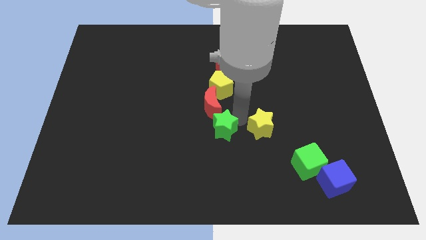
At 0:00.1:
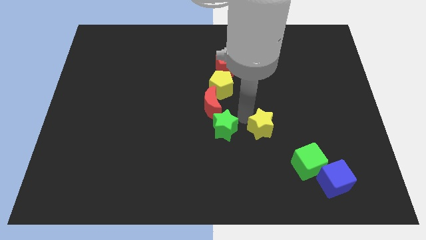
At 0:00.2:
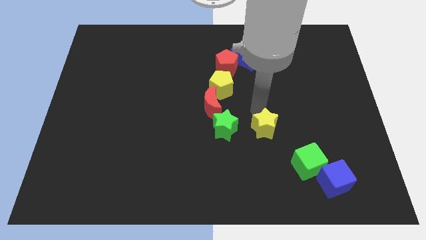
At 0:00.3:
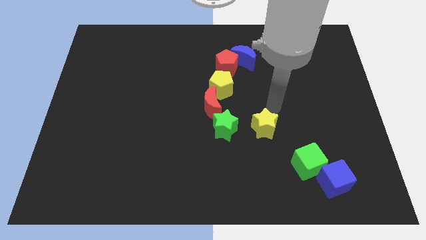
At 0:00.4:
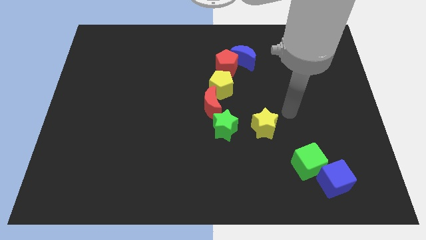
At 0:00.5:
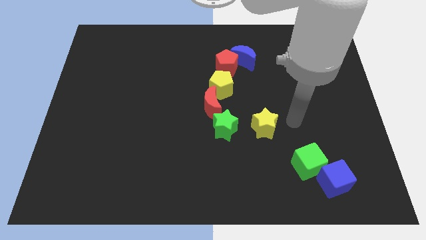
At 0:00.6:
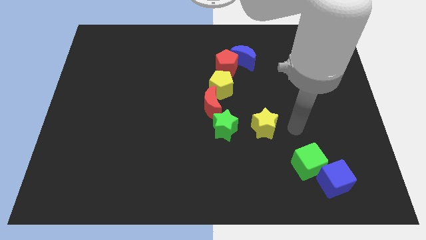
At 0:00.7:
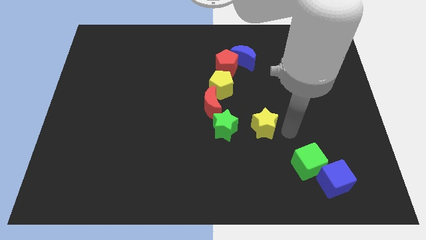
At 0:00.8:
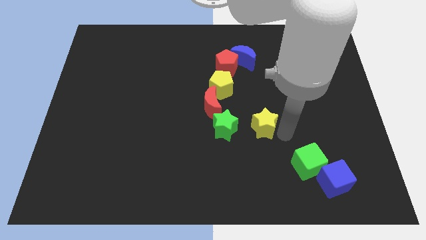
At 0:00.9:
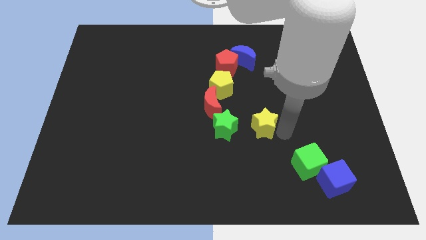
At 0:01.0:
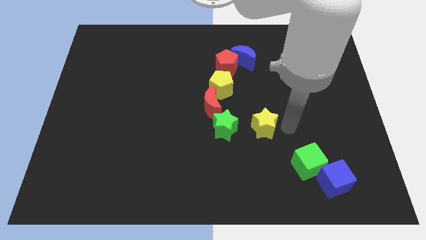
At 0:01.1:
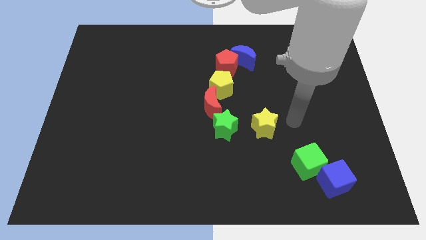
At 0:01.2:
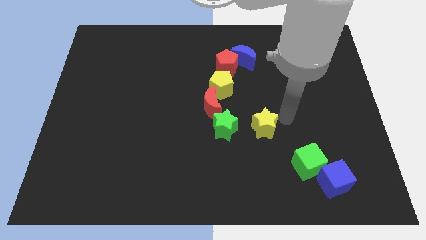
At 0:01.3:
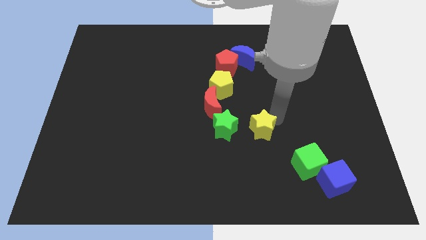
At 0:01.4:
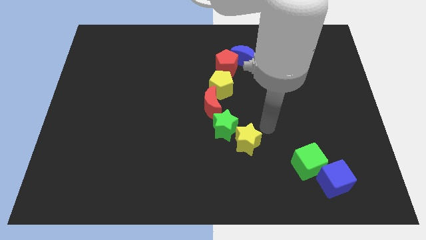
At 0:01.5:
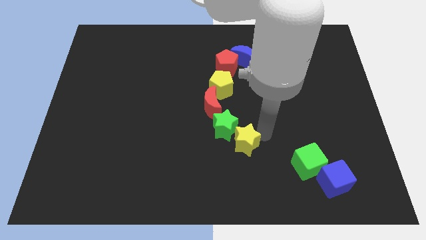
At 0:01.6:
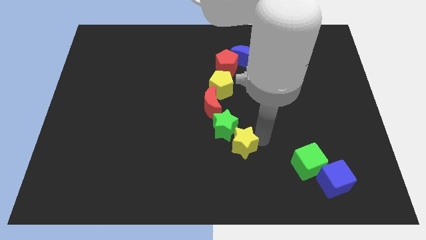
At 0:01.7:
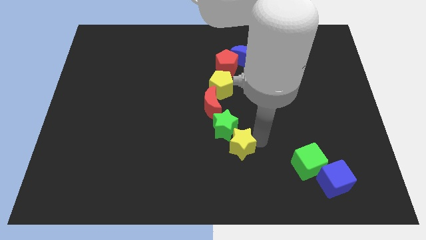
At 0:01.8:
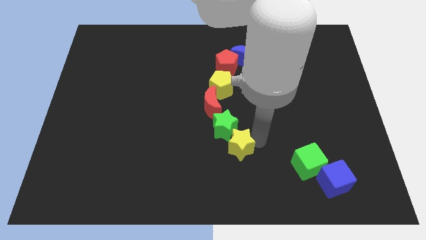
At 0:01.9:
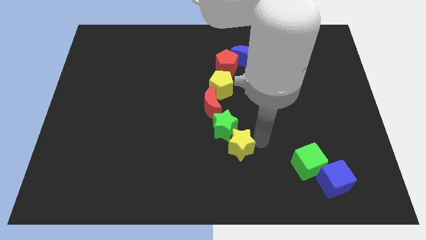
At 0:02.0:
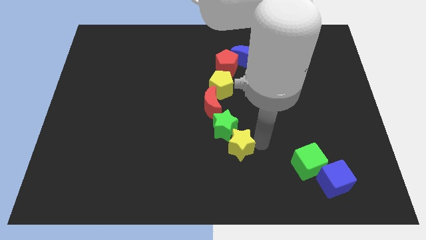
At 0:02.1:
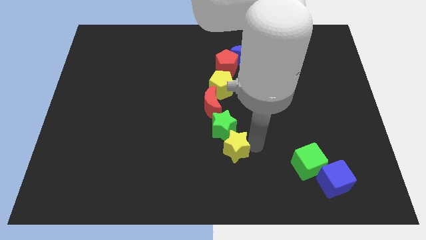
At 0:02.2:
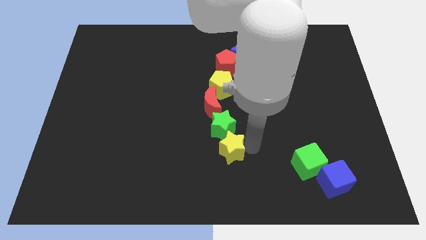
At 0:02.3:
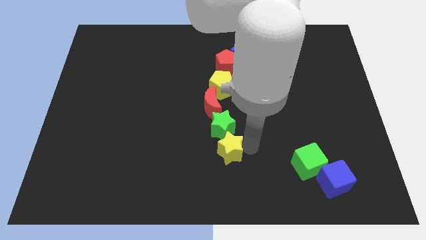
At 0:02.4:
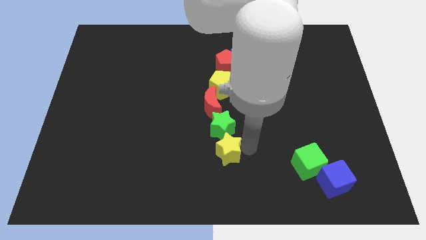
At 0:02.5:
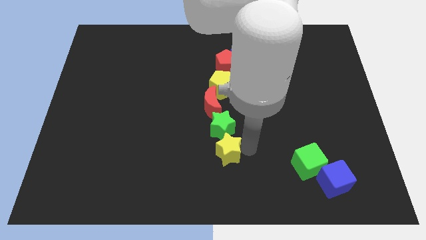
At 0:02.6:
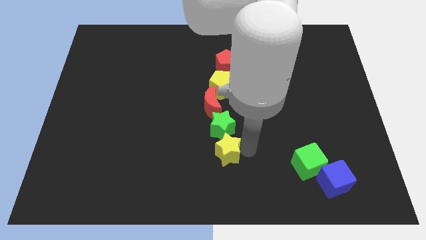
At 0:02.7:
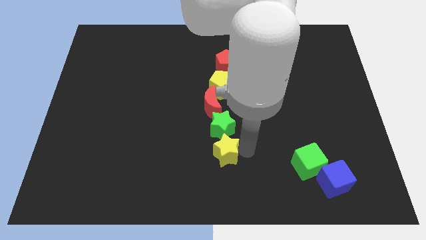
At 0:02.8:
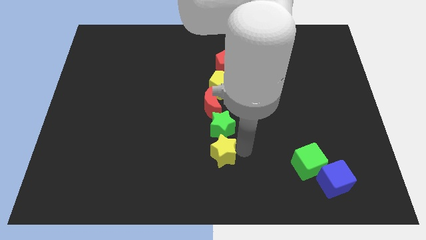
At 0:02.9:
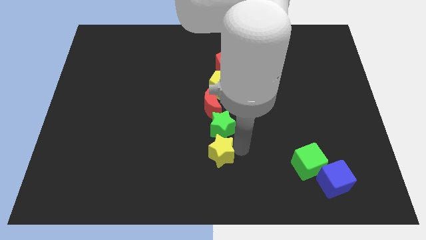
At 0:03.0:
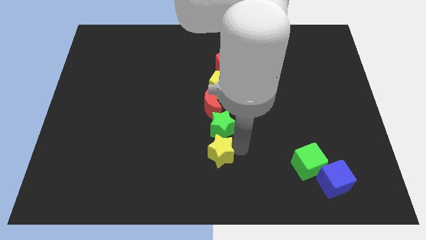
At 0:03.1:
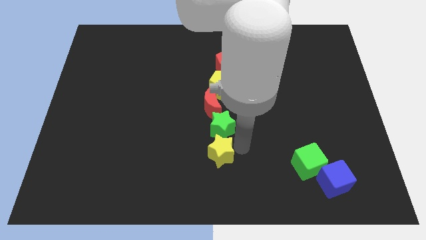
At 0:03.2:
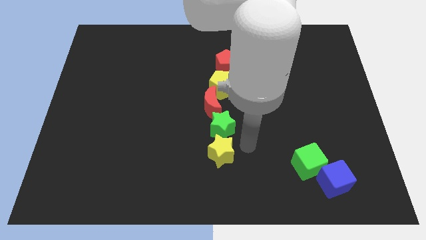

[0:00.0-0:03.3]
put the yellow star at the bottom of green star

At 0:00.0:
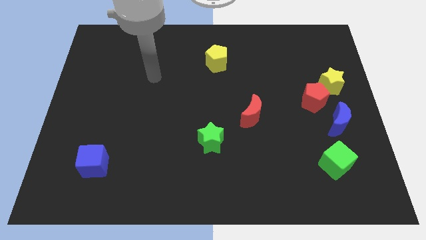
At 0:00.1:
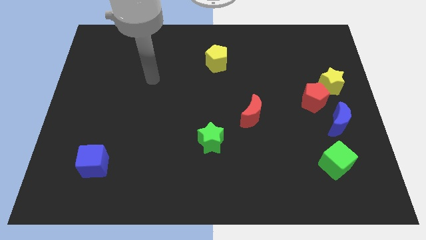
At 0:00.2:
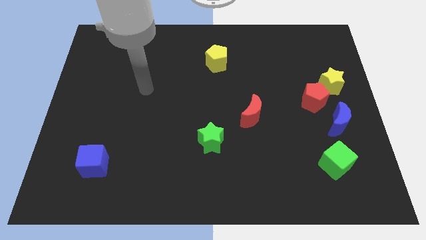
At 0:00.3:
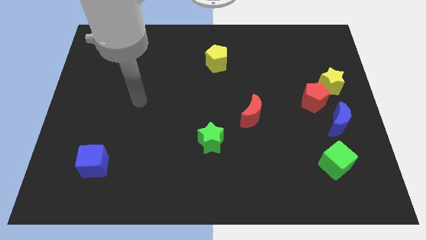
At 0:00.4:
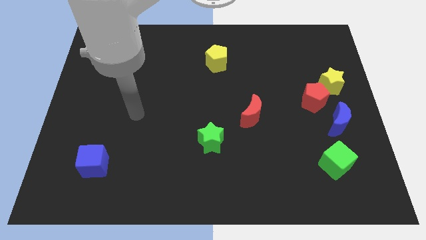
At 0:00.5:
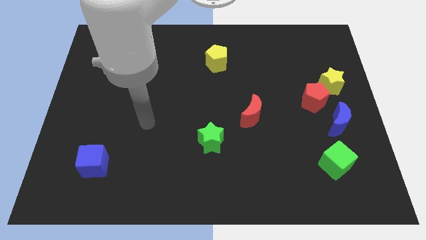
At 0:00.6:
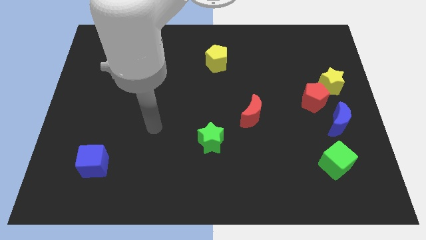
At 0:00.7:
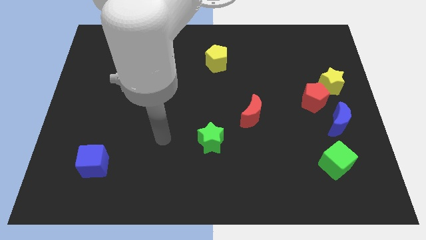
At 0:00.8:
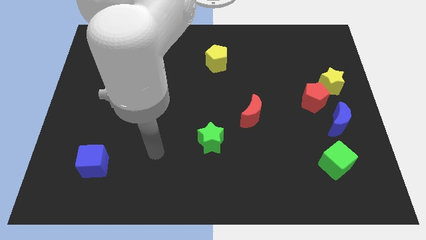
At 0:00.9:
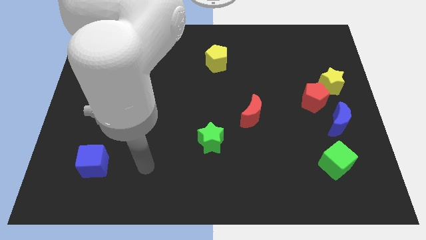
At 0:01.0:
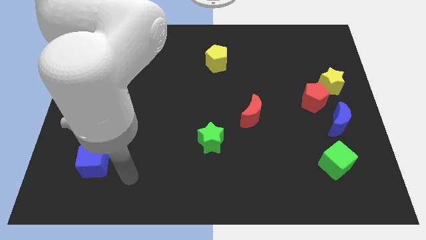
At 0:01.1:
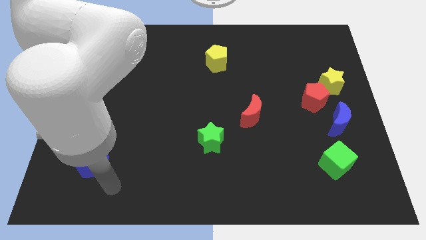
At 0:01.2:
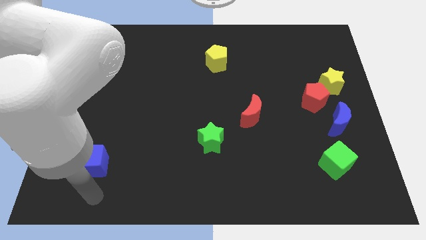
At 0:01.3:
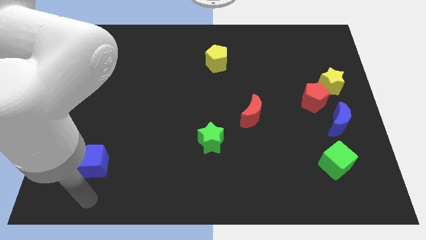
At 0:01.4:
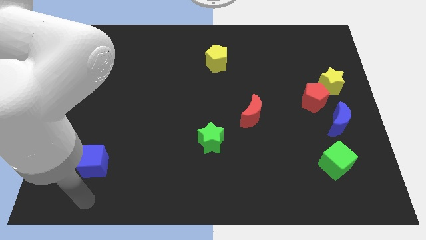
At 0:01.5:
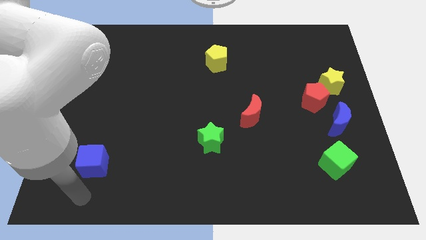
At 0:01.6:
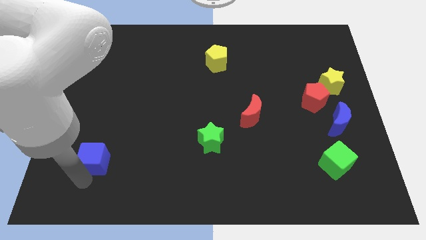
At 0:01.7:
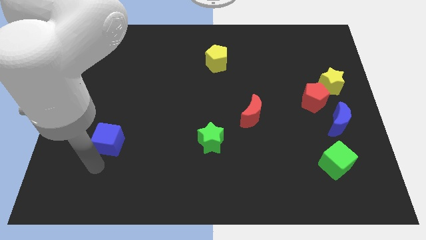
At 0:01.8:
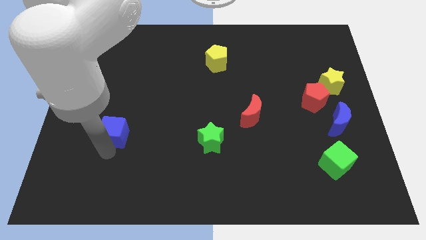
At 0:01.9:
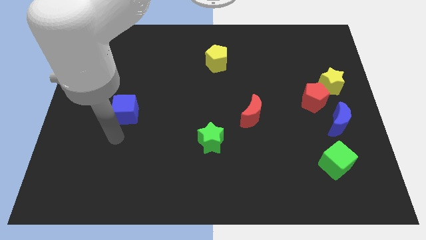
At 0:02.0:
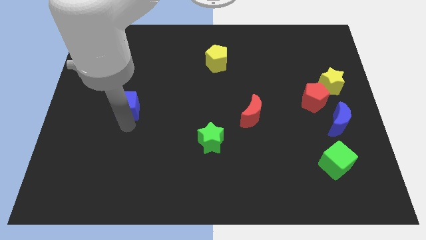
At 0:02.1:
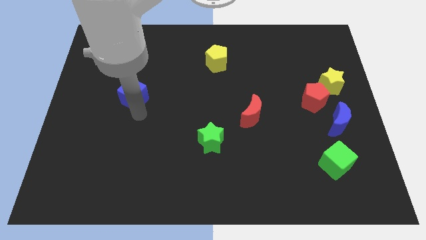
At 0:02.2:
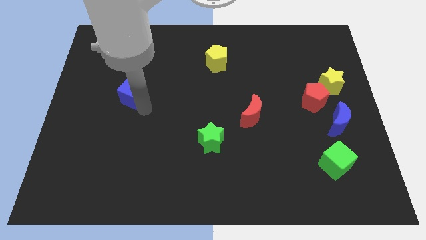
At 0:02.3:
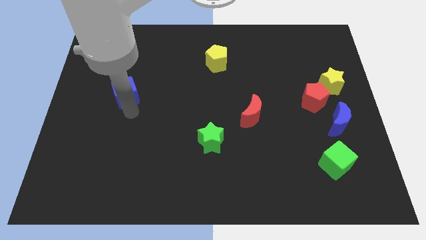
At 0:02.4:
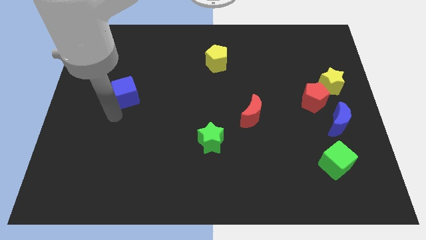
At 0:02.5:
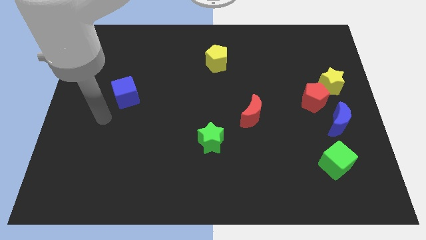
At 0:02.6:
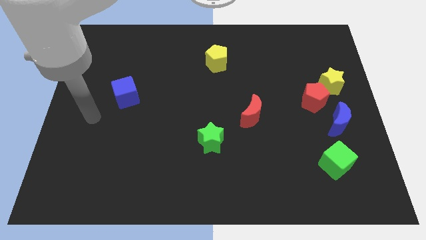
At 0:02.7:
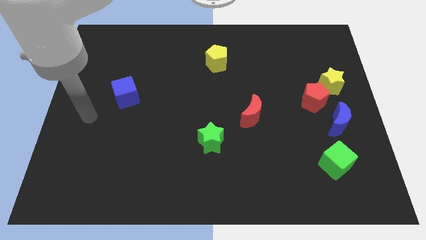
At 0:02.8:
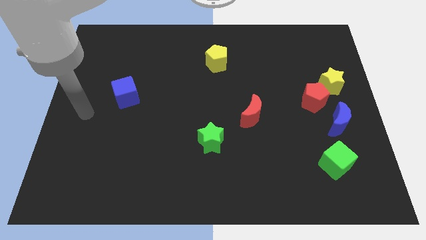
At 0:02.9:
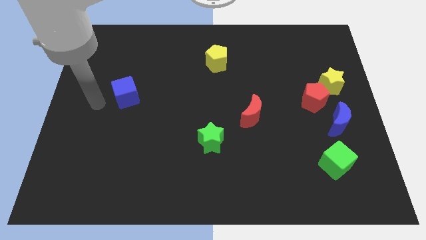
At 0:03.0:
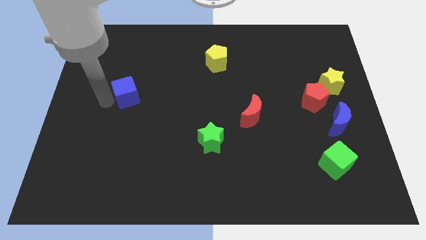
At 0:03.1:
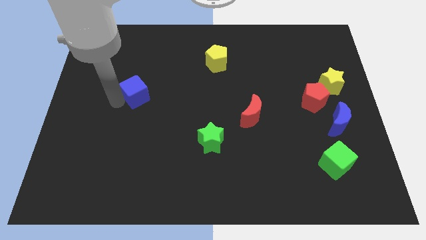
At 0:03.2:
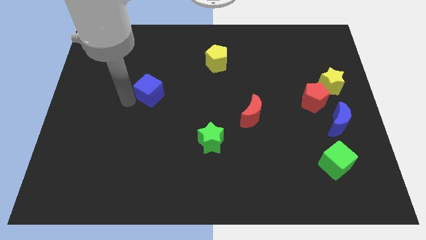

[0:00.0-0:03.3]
go and push the blue cube upwards

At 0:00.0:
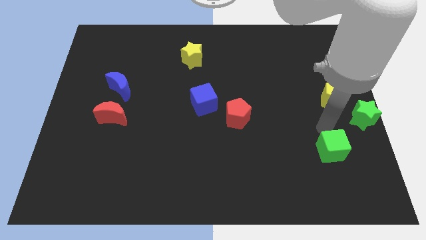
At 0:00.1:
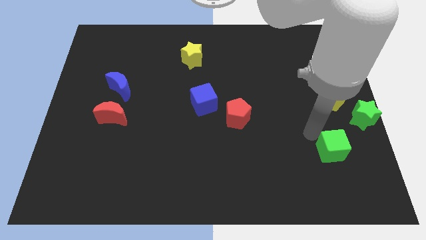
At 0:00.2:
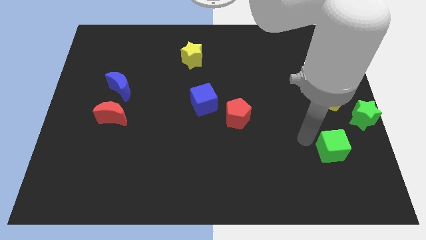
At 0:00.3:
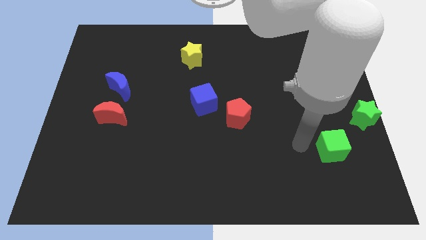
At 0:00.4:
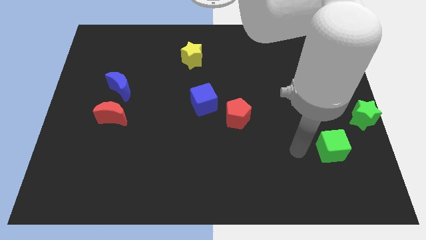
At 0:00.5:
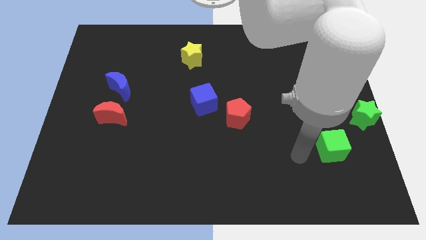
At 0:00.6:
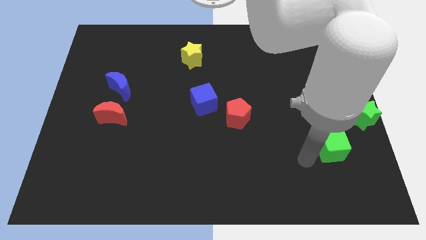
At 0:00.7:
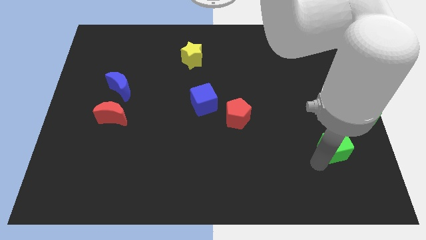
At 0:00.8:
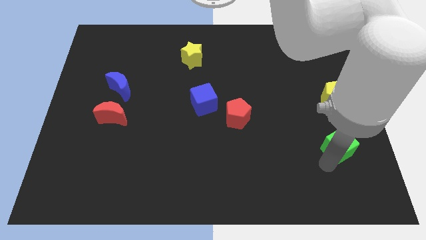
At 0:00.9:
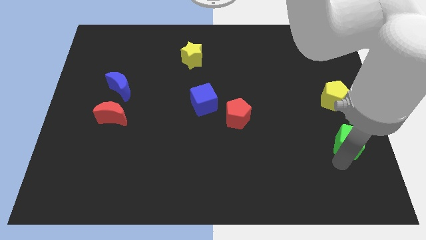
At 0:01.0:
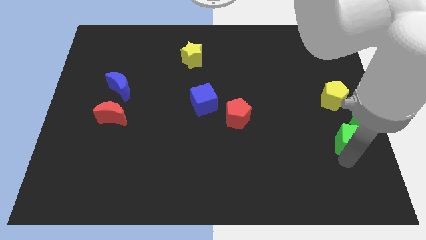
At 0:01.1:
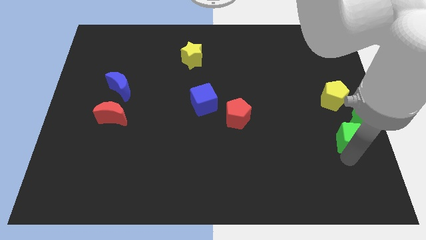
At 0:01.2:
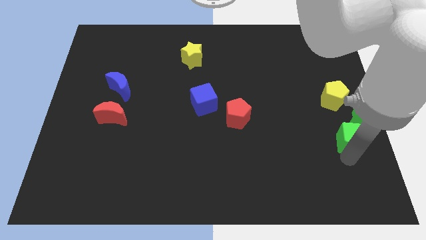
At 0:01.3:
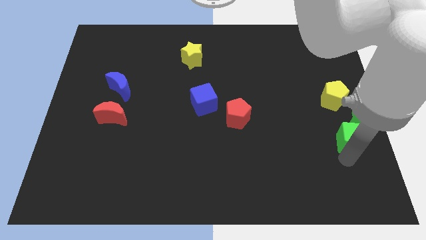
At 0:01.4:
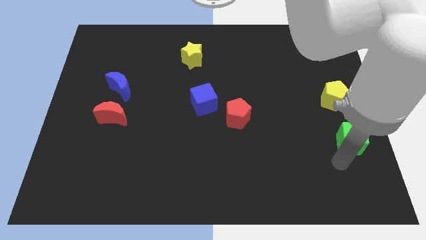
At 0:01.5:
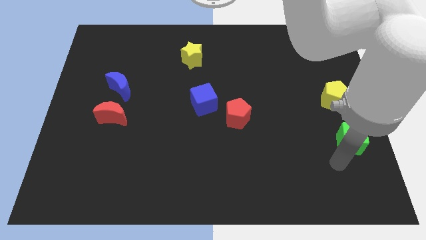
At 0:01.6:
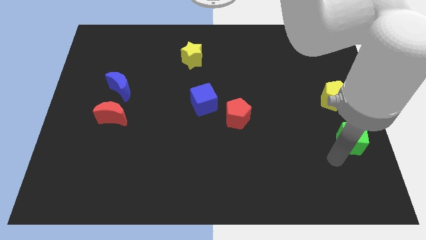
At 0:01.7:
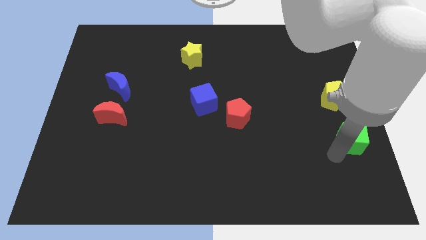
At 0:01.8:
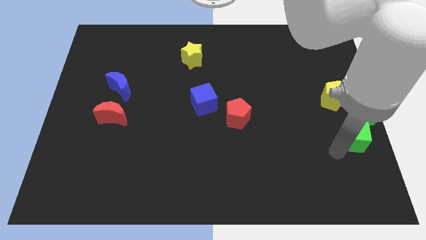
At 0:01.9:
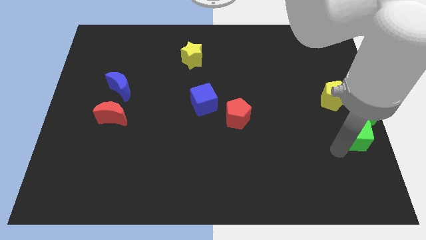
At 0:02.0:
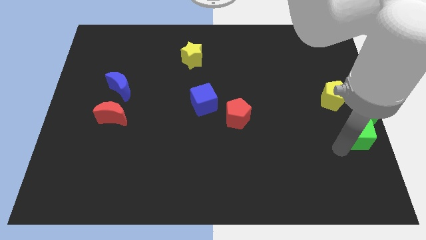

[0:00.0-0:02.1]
push the green cube into green star

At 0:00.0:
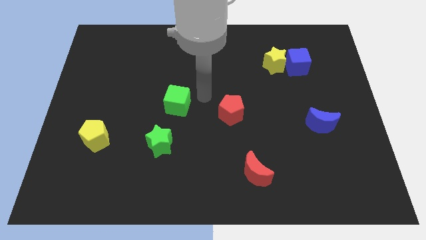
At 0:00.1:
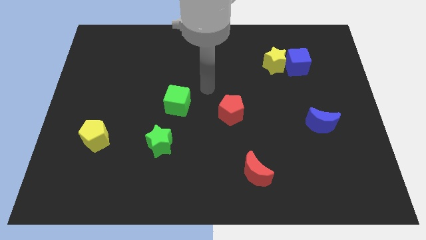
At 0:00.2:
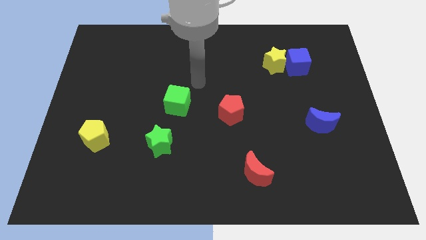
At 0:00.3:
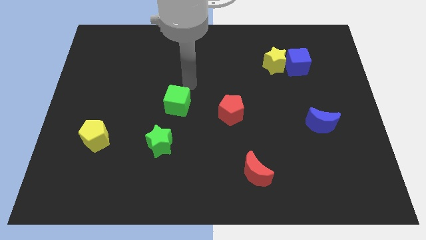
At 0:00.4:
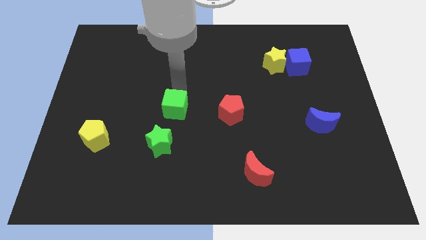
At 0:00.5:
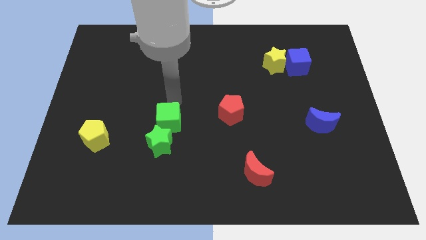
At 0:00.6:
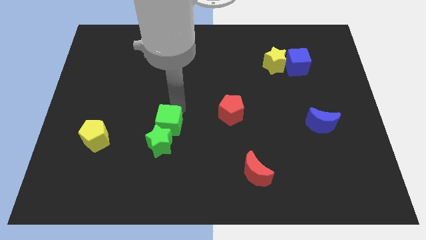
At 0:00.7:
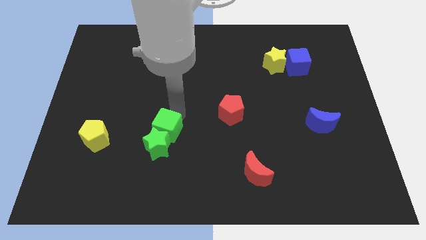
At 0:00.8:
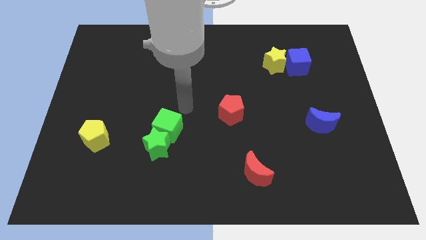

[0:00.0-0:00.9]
push the green cube into the green star
